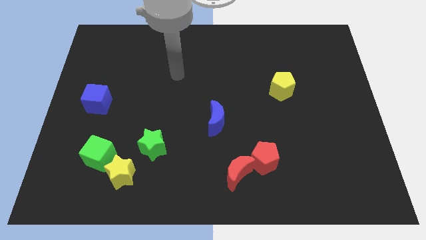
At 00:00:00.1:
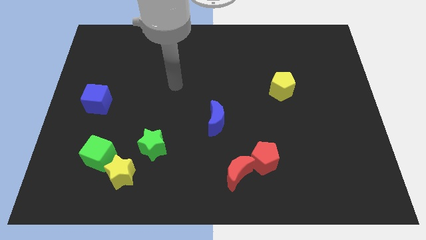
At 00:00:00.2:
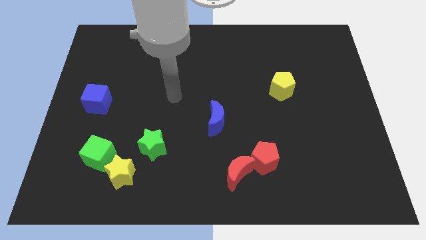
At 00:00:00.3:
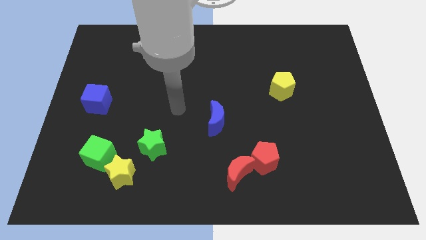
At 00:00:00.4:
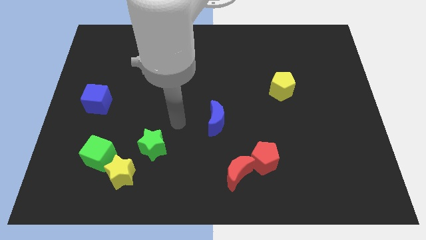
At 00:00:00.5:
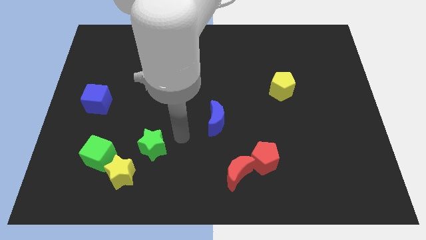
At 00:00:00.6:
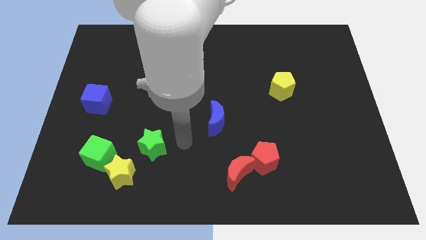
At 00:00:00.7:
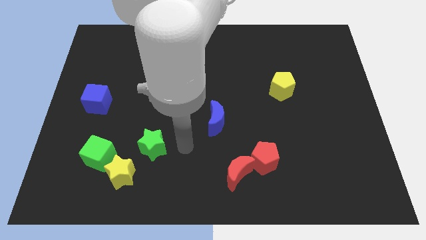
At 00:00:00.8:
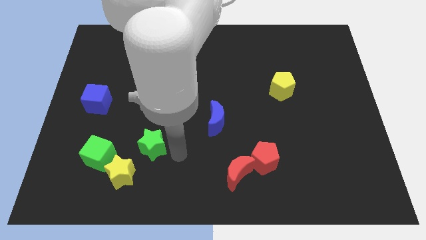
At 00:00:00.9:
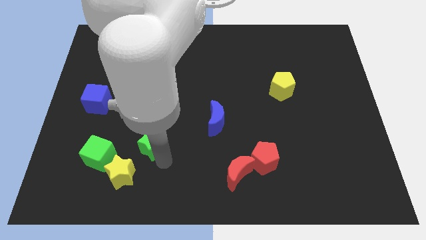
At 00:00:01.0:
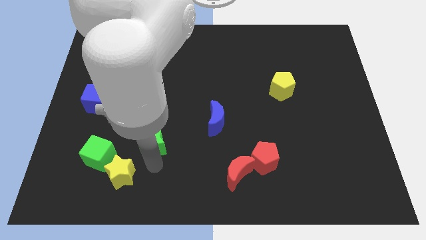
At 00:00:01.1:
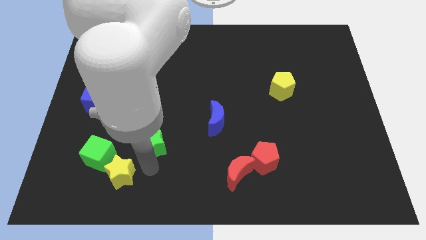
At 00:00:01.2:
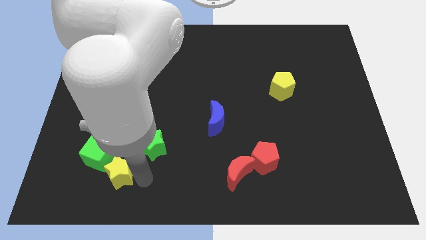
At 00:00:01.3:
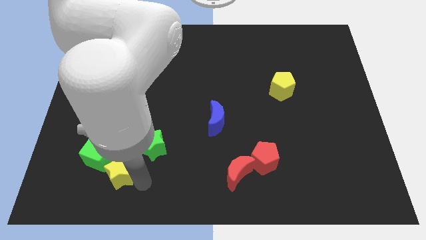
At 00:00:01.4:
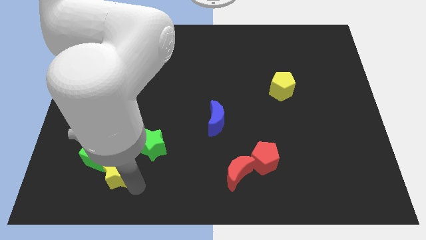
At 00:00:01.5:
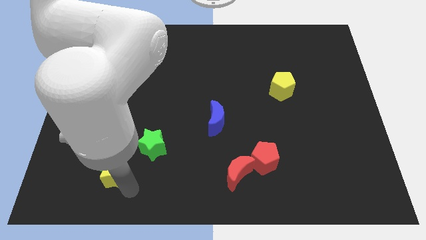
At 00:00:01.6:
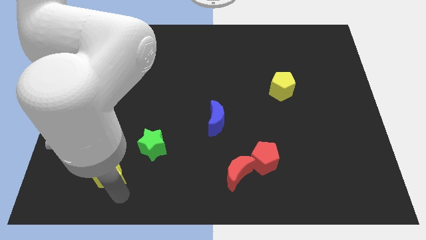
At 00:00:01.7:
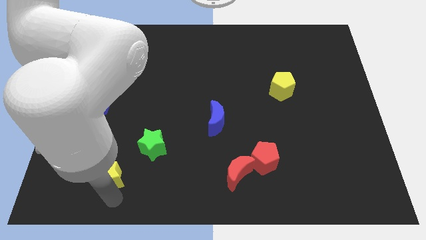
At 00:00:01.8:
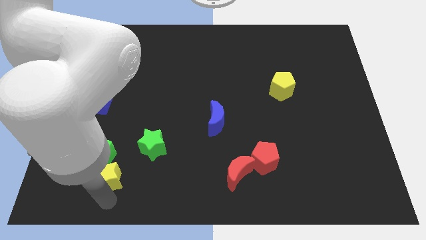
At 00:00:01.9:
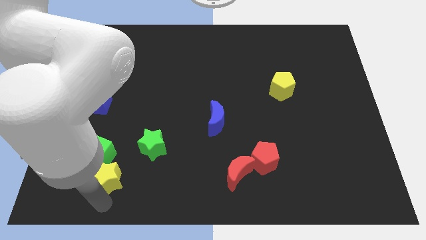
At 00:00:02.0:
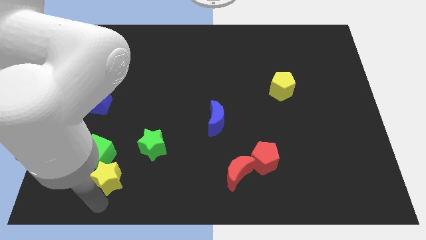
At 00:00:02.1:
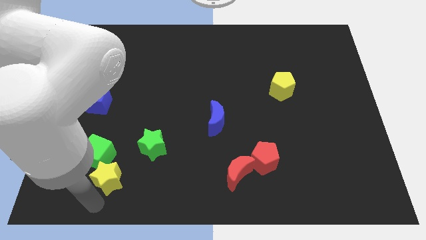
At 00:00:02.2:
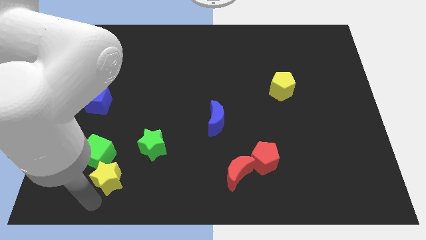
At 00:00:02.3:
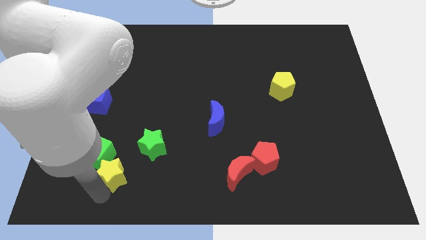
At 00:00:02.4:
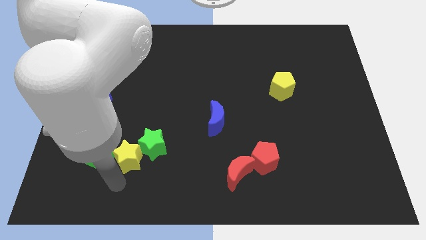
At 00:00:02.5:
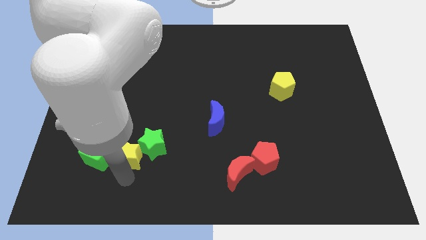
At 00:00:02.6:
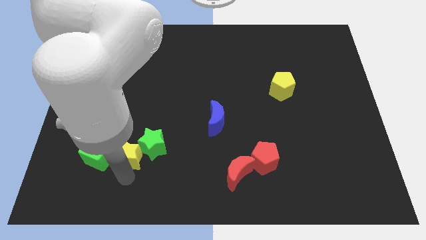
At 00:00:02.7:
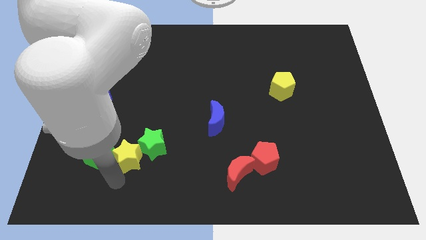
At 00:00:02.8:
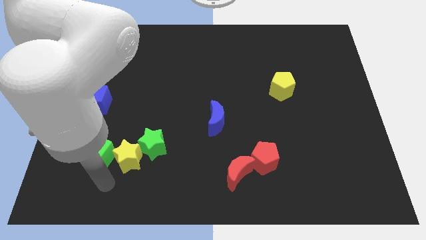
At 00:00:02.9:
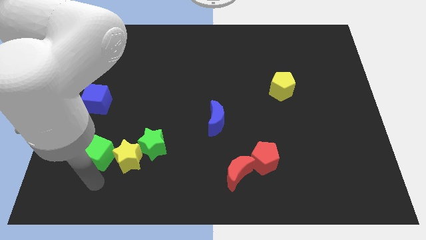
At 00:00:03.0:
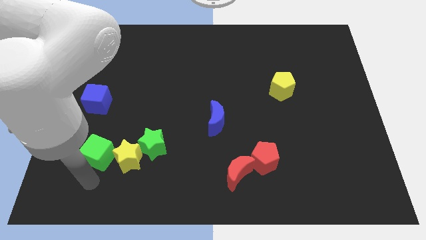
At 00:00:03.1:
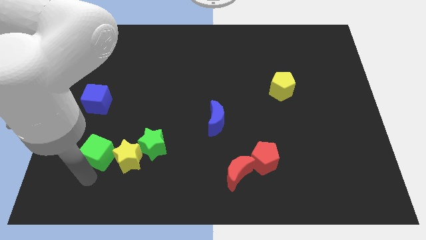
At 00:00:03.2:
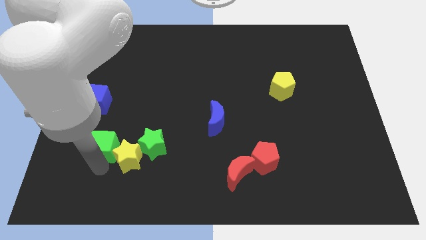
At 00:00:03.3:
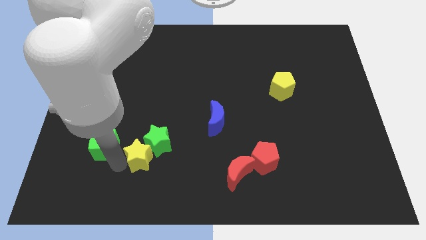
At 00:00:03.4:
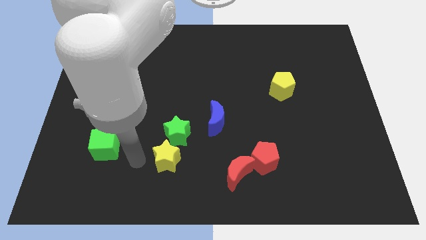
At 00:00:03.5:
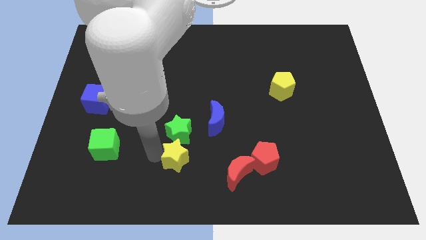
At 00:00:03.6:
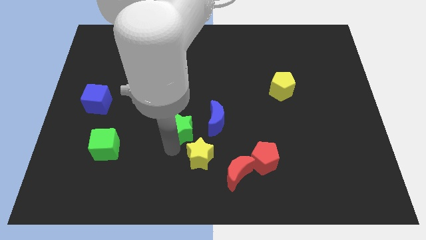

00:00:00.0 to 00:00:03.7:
put the green star vertically above the yellow star

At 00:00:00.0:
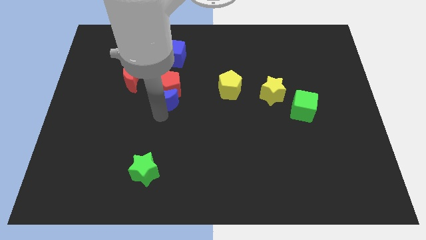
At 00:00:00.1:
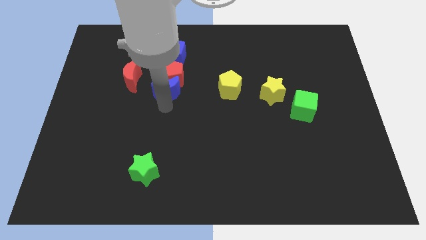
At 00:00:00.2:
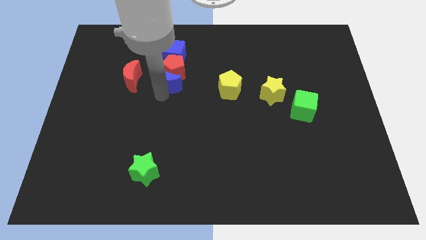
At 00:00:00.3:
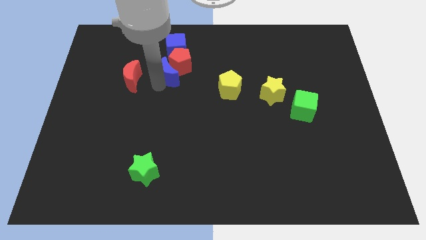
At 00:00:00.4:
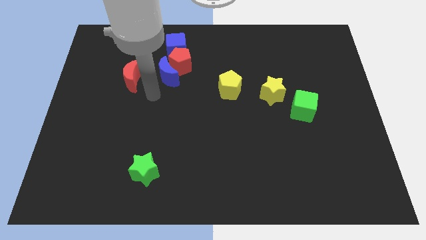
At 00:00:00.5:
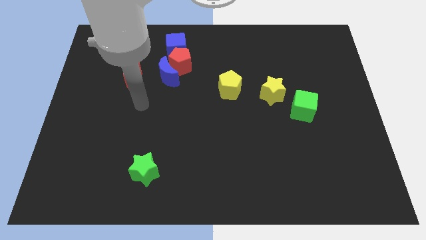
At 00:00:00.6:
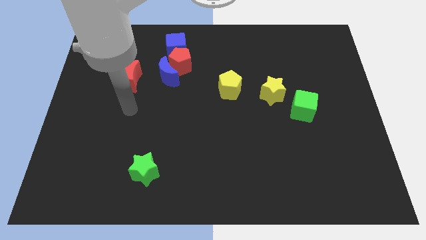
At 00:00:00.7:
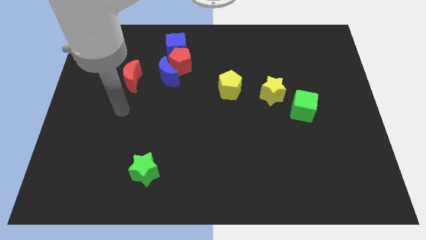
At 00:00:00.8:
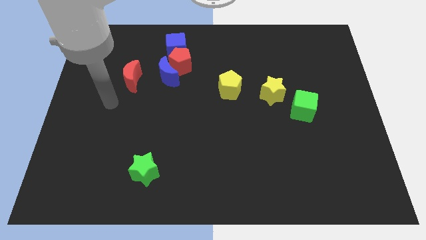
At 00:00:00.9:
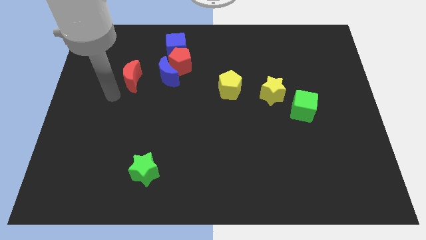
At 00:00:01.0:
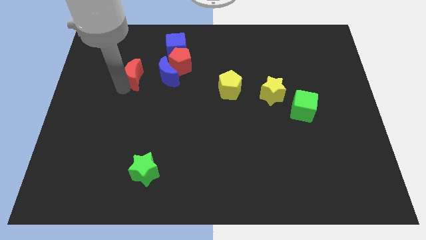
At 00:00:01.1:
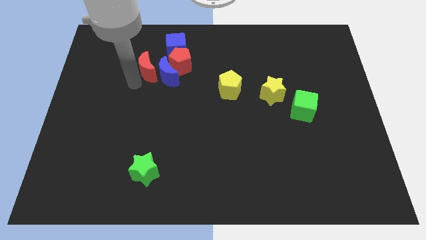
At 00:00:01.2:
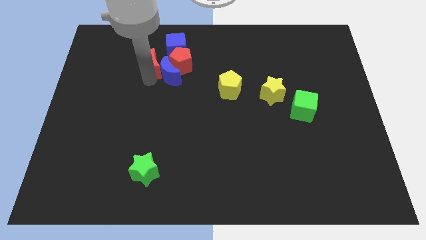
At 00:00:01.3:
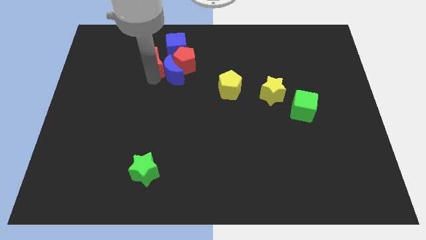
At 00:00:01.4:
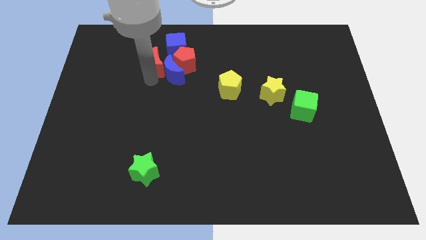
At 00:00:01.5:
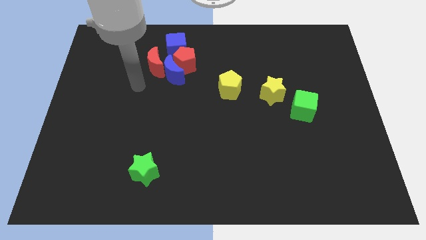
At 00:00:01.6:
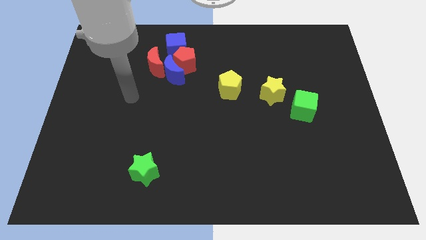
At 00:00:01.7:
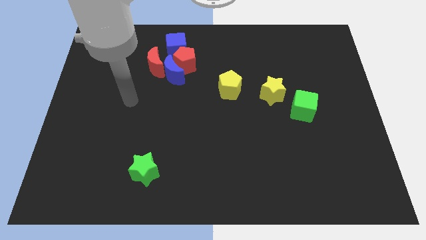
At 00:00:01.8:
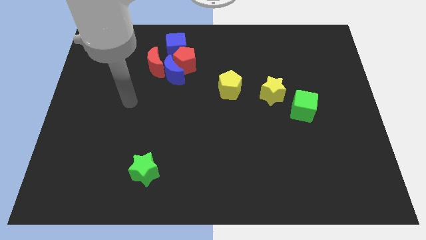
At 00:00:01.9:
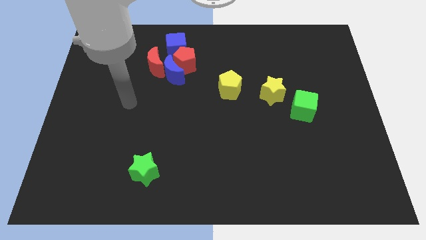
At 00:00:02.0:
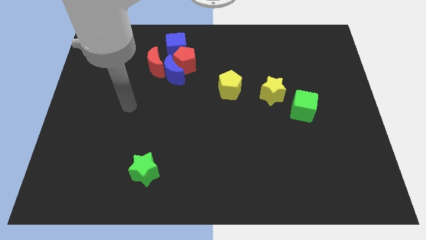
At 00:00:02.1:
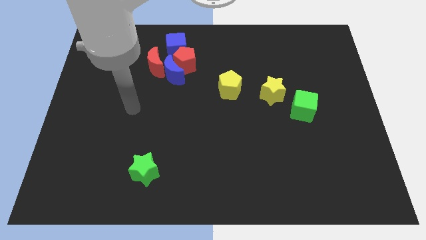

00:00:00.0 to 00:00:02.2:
push the red crescent into the blue crescent

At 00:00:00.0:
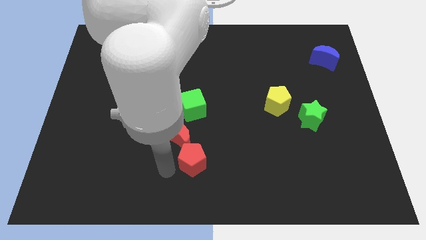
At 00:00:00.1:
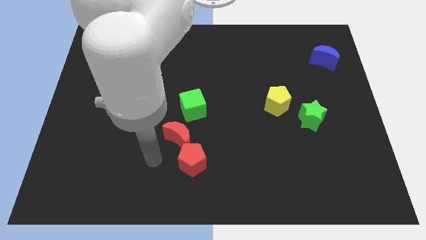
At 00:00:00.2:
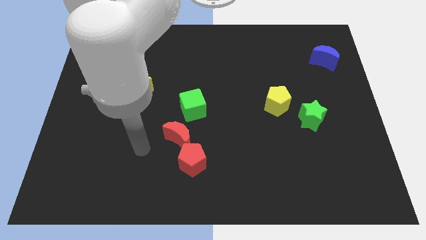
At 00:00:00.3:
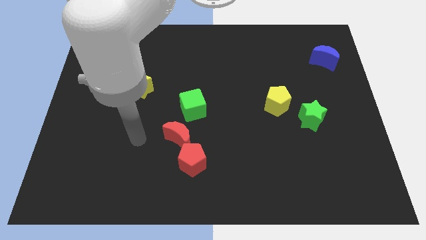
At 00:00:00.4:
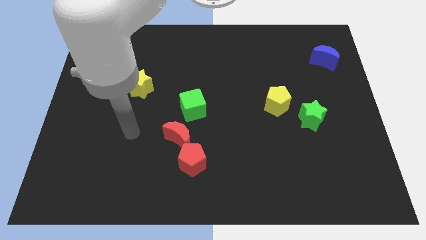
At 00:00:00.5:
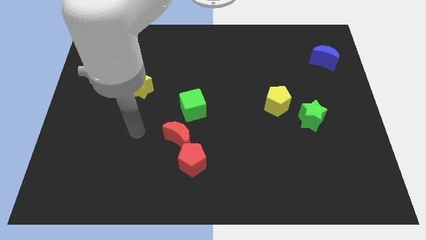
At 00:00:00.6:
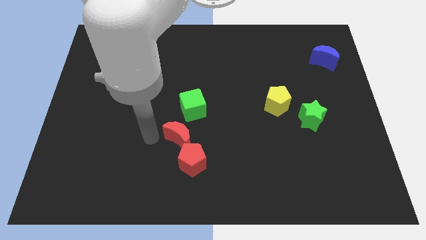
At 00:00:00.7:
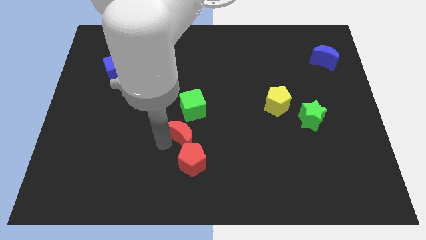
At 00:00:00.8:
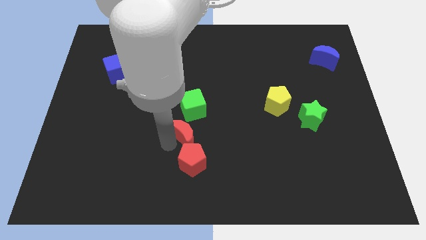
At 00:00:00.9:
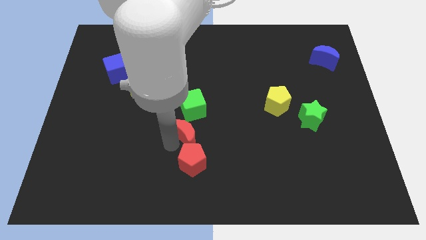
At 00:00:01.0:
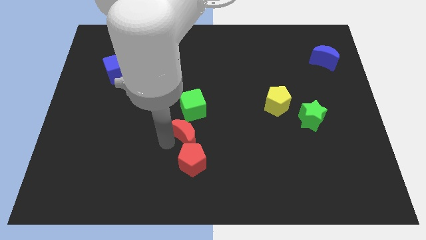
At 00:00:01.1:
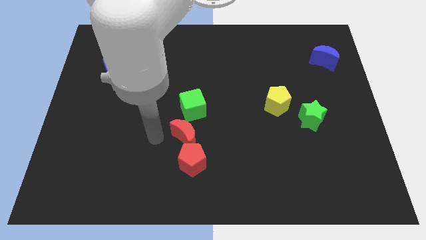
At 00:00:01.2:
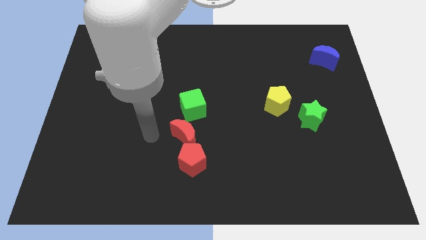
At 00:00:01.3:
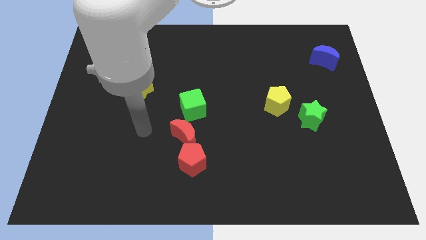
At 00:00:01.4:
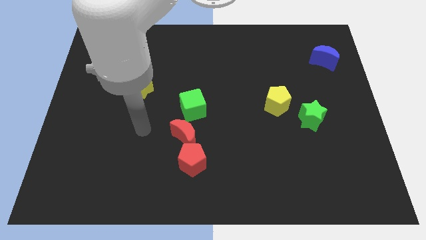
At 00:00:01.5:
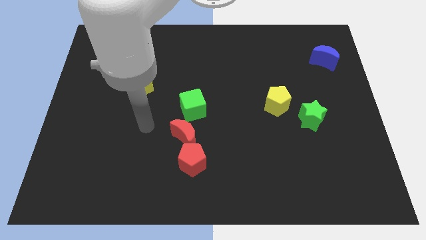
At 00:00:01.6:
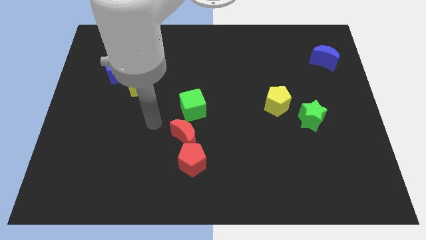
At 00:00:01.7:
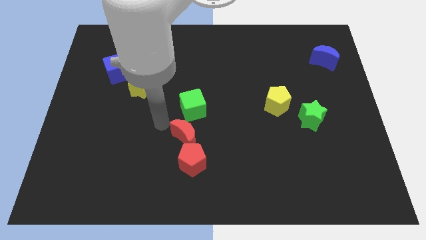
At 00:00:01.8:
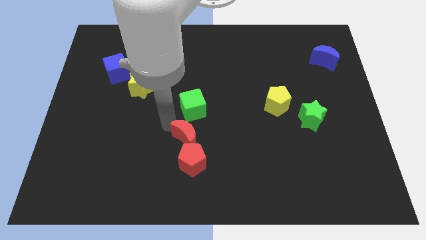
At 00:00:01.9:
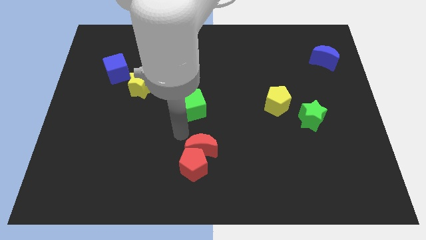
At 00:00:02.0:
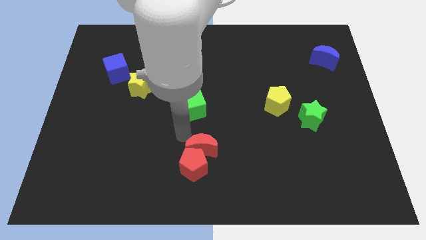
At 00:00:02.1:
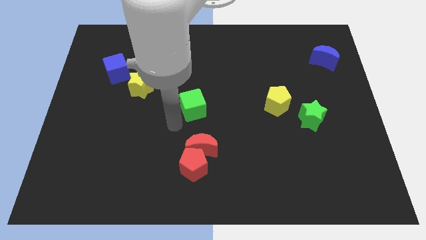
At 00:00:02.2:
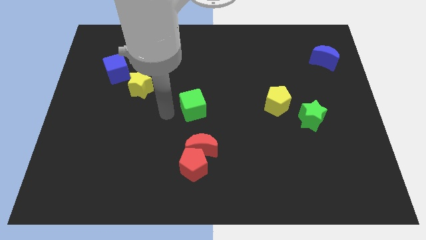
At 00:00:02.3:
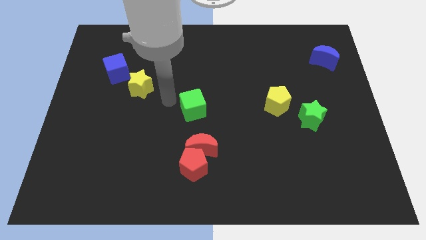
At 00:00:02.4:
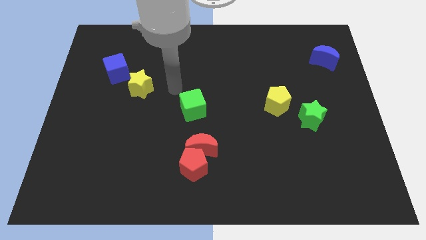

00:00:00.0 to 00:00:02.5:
turn the red crescent above the red pentagon

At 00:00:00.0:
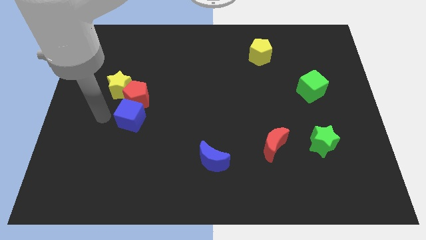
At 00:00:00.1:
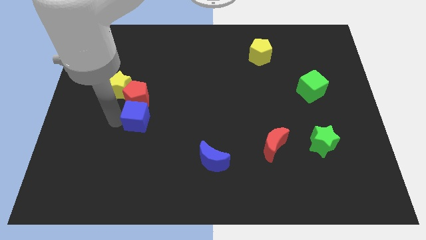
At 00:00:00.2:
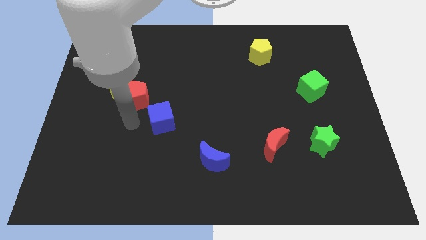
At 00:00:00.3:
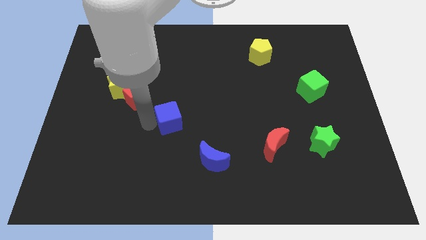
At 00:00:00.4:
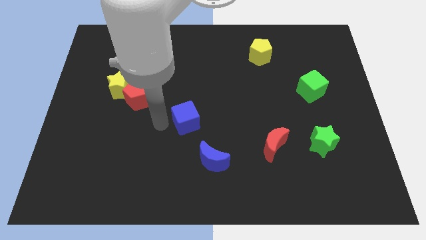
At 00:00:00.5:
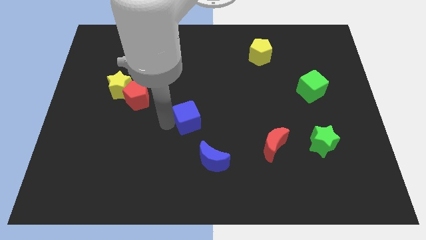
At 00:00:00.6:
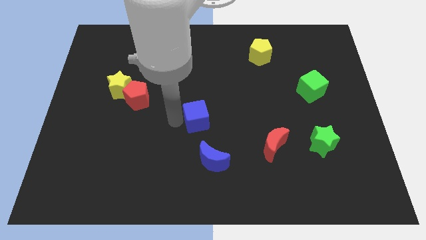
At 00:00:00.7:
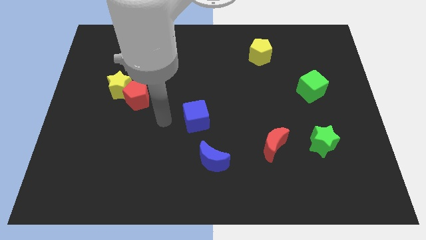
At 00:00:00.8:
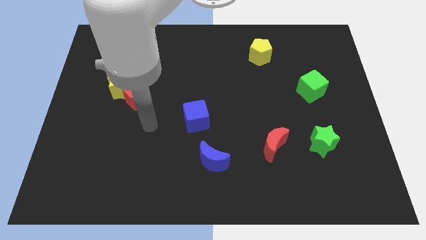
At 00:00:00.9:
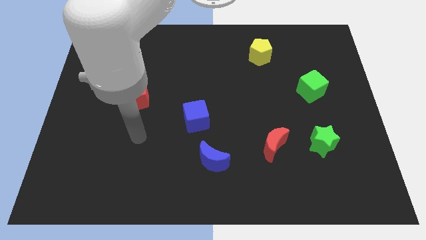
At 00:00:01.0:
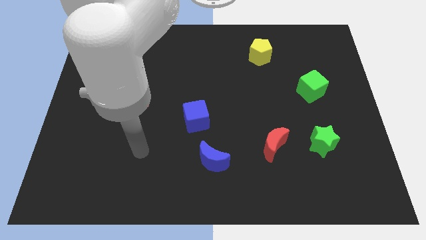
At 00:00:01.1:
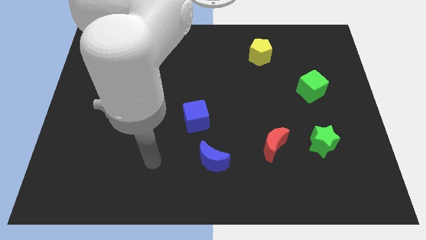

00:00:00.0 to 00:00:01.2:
push blue cube towards the center of the board
